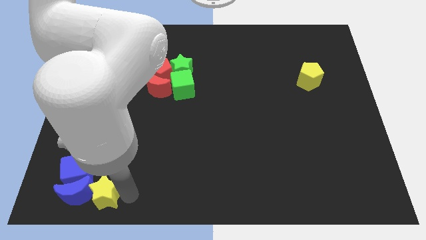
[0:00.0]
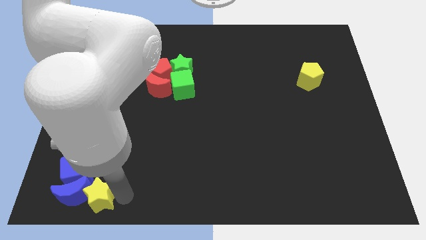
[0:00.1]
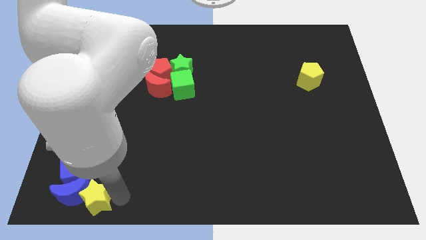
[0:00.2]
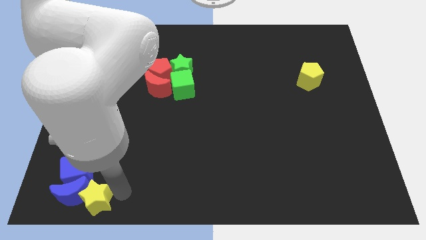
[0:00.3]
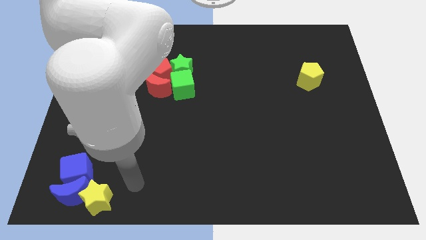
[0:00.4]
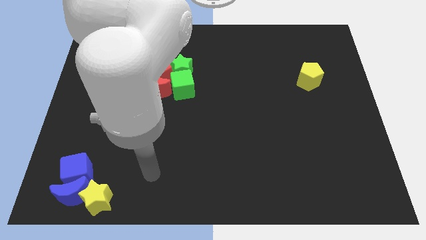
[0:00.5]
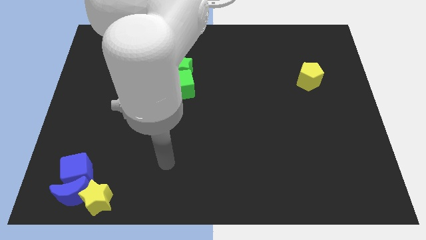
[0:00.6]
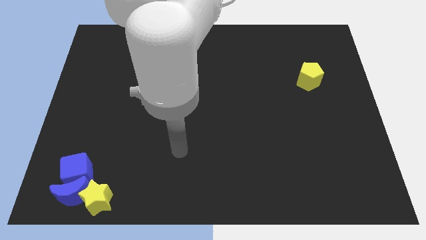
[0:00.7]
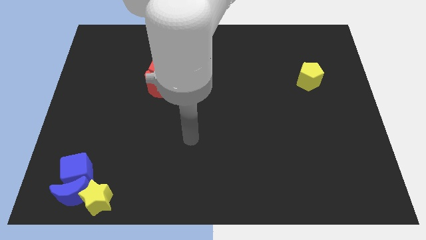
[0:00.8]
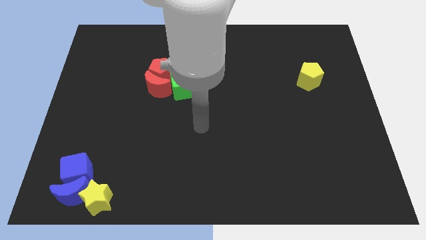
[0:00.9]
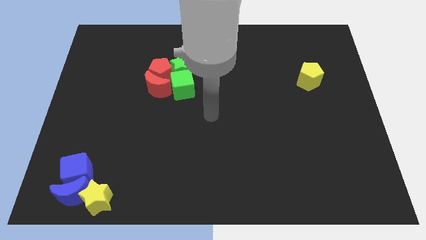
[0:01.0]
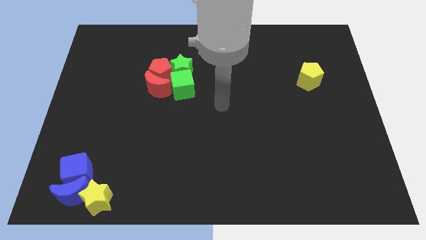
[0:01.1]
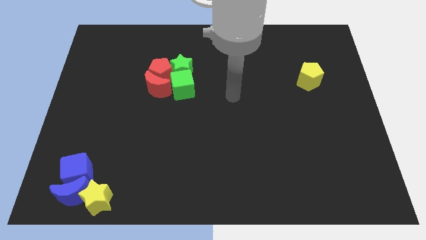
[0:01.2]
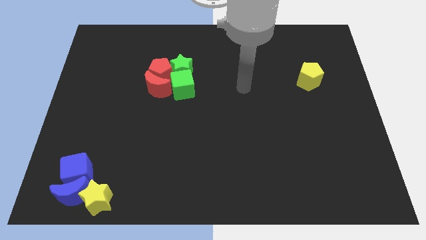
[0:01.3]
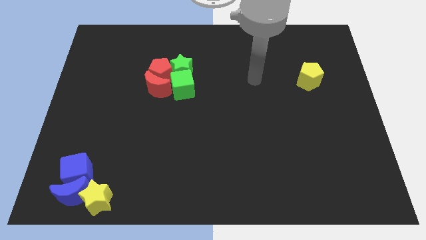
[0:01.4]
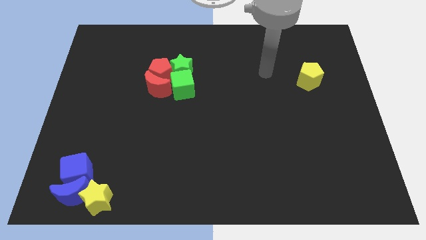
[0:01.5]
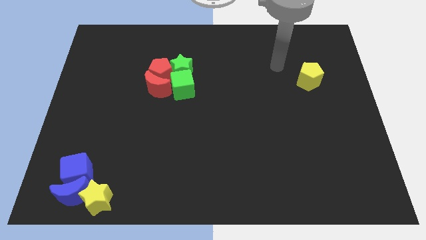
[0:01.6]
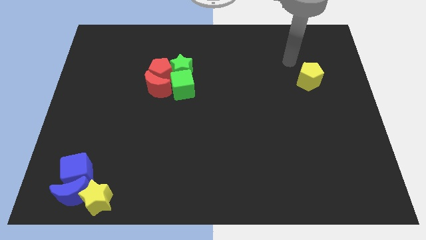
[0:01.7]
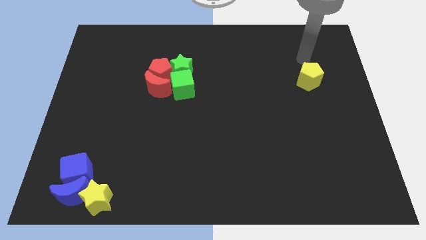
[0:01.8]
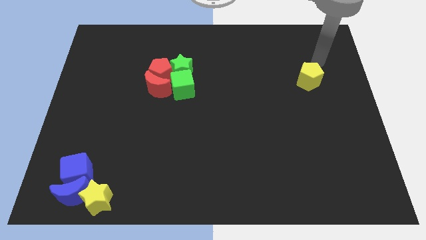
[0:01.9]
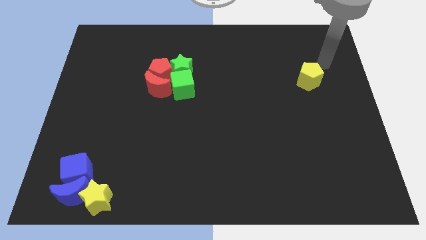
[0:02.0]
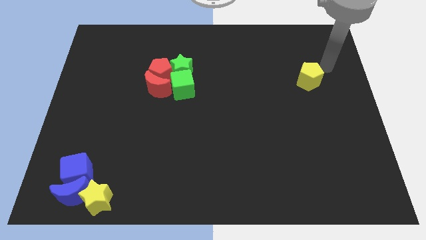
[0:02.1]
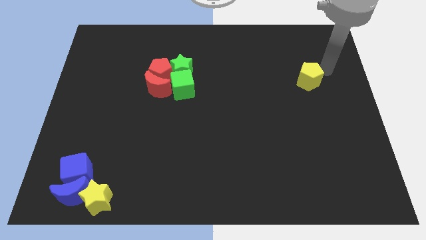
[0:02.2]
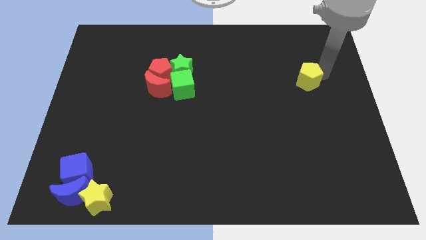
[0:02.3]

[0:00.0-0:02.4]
move your arm away from the yellow star

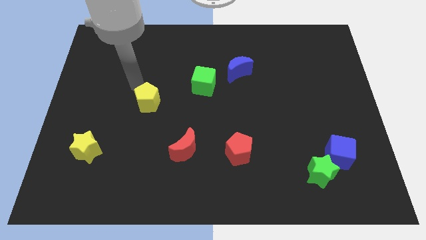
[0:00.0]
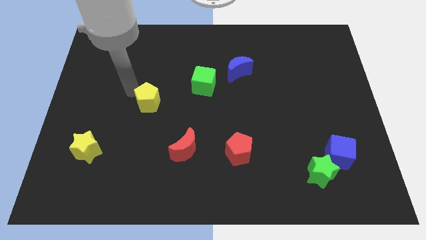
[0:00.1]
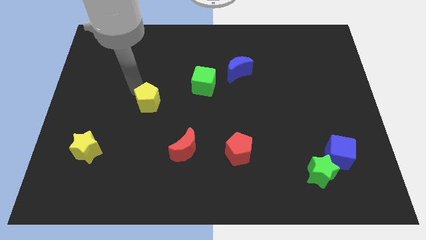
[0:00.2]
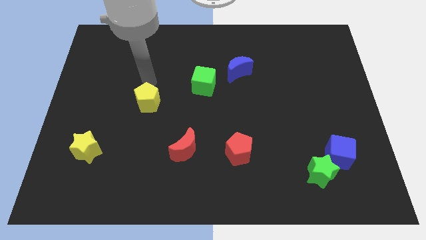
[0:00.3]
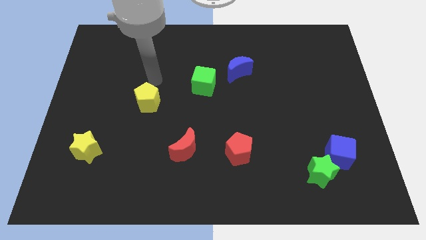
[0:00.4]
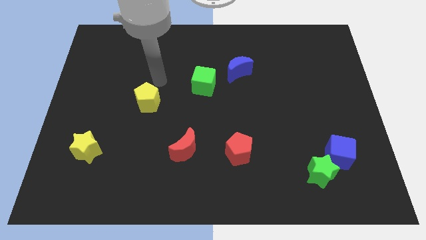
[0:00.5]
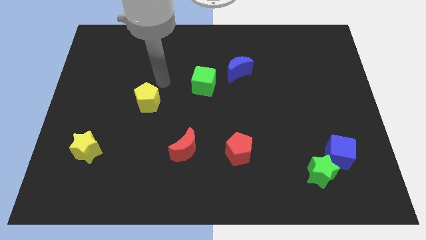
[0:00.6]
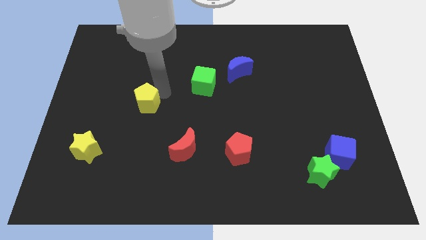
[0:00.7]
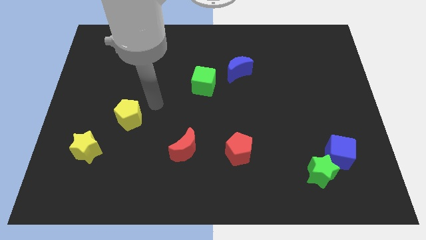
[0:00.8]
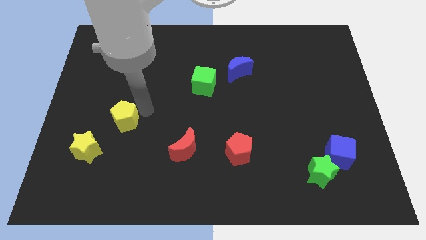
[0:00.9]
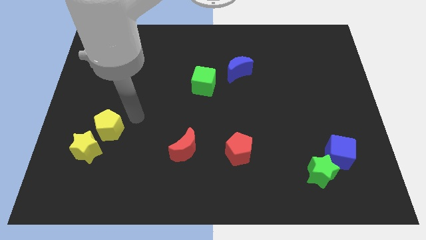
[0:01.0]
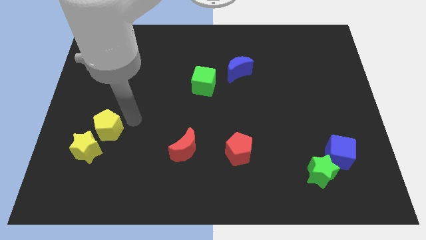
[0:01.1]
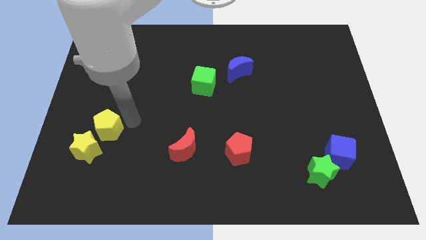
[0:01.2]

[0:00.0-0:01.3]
move the yellow pentagon close to the yellow star

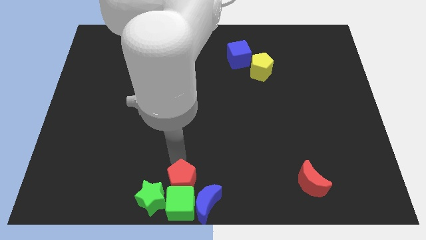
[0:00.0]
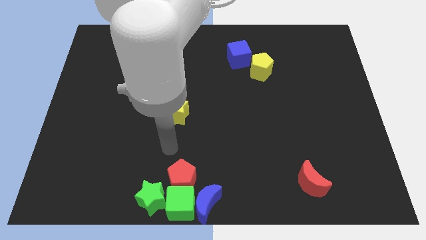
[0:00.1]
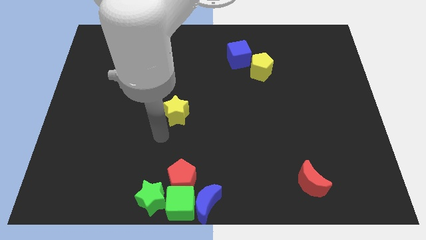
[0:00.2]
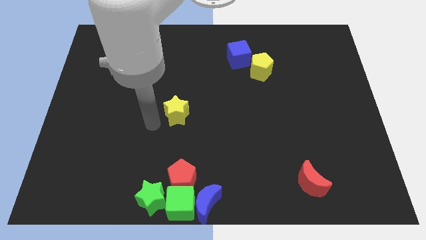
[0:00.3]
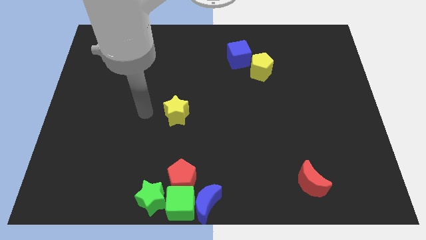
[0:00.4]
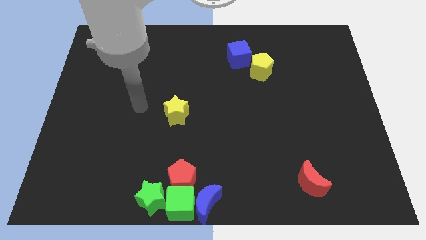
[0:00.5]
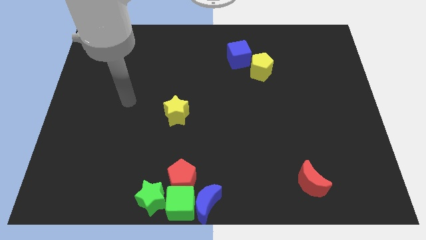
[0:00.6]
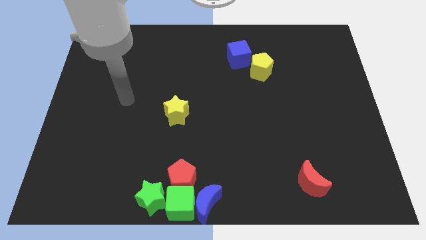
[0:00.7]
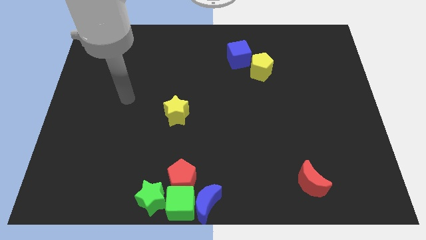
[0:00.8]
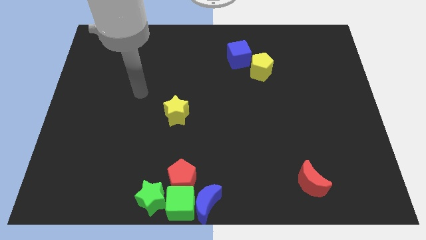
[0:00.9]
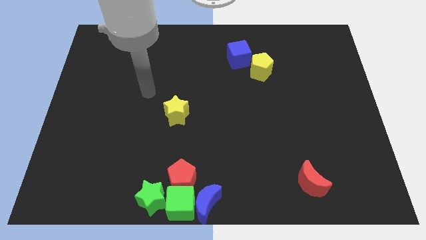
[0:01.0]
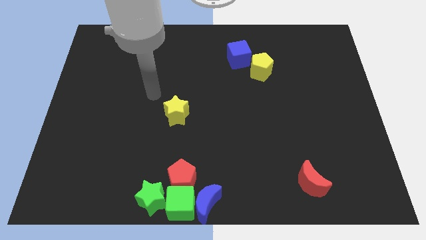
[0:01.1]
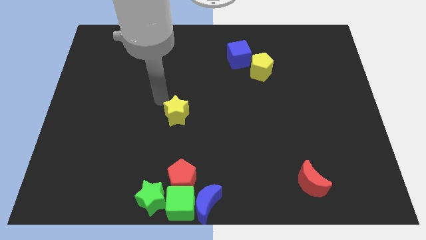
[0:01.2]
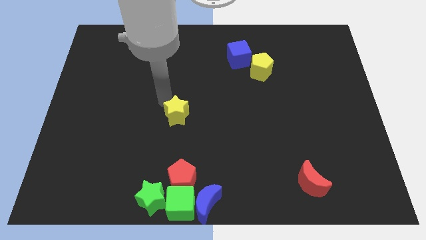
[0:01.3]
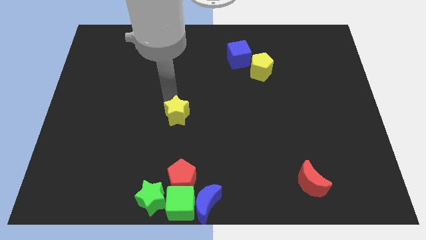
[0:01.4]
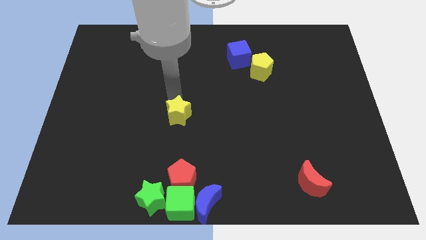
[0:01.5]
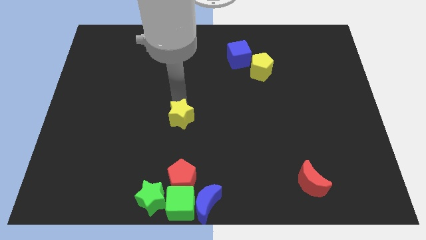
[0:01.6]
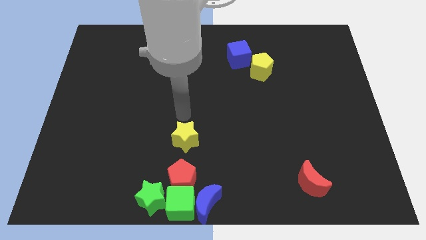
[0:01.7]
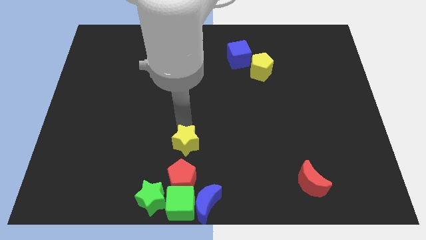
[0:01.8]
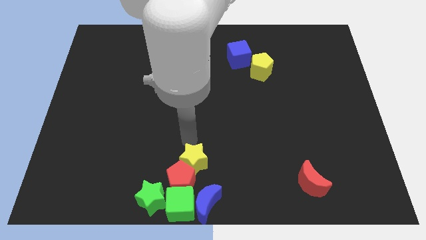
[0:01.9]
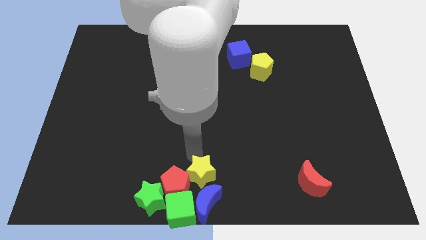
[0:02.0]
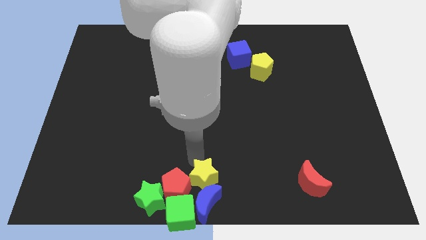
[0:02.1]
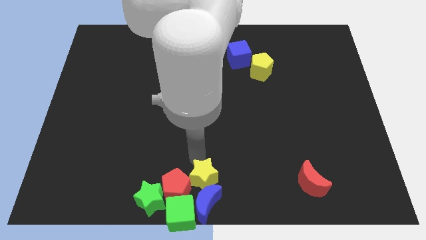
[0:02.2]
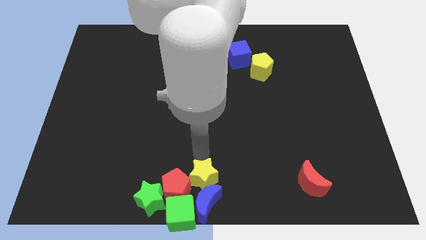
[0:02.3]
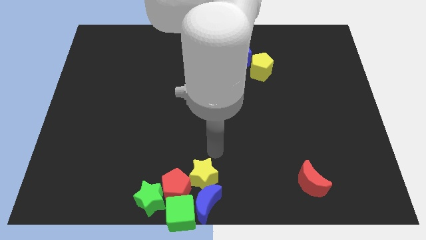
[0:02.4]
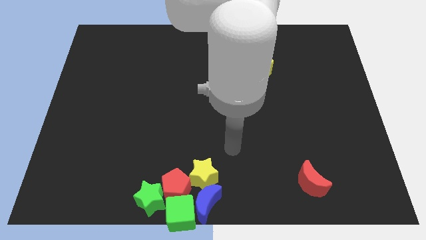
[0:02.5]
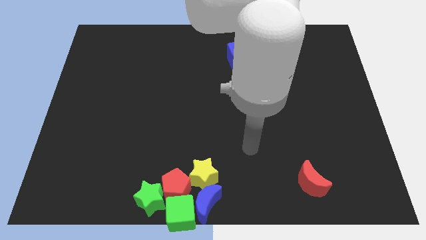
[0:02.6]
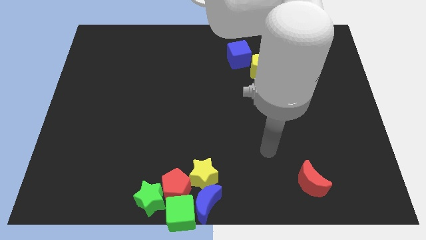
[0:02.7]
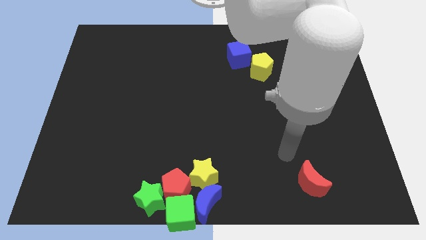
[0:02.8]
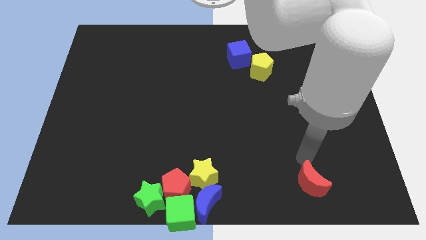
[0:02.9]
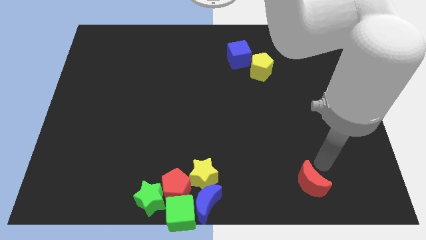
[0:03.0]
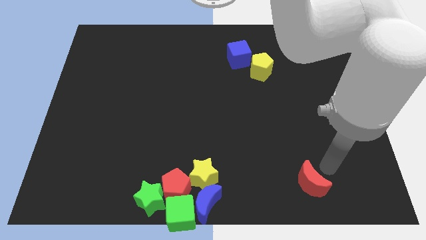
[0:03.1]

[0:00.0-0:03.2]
move the arm away from the red pentagon

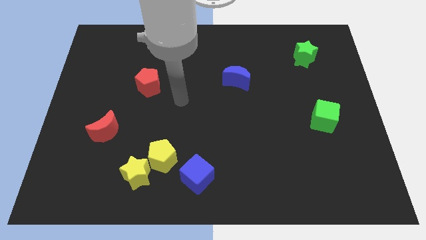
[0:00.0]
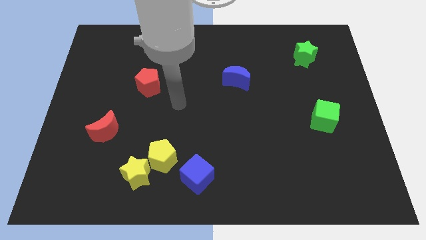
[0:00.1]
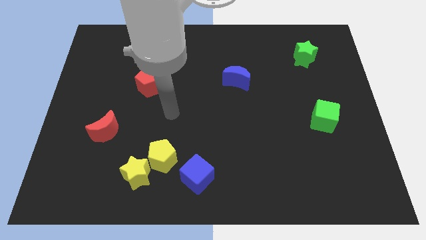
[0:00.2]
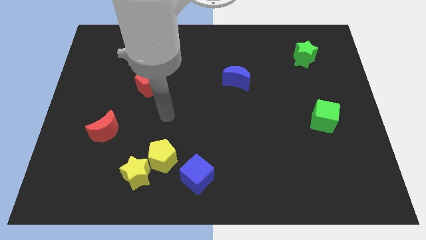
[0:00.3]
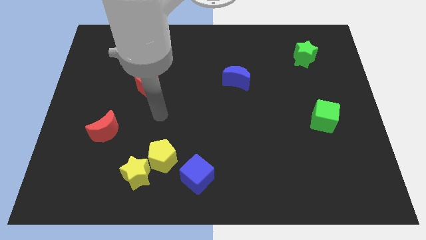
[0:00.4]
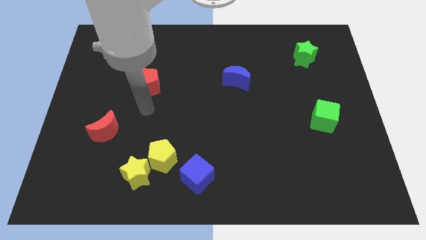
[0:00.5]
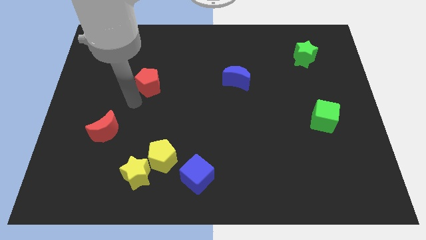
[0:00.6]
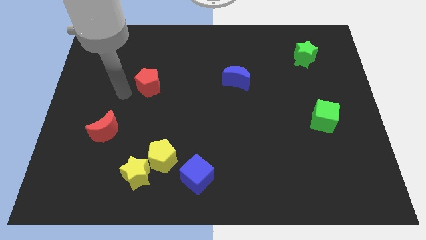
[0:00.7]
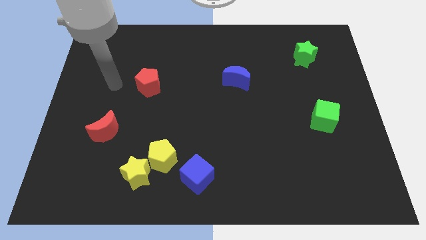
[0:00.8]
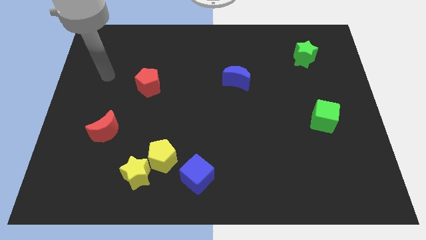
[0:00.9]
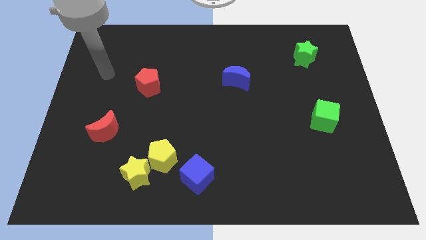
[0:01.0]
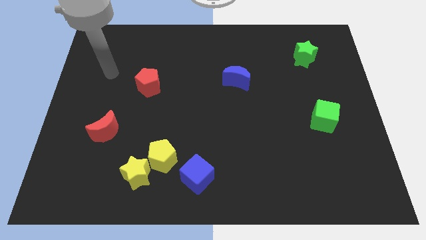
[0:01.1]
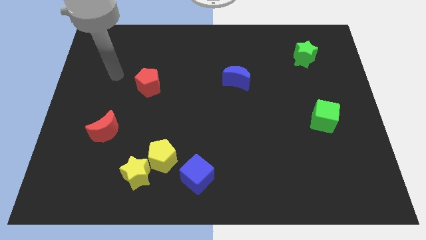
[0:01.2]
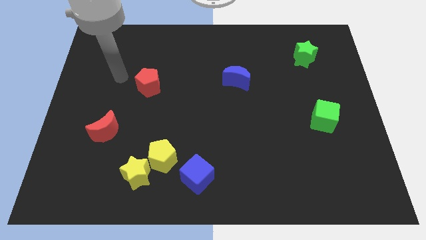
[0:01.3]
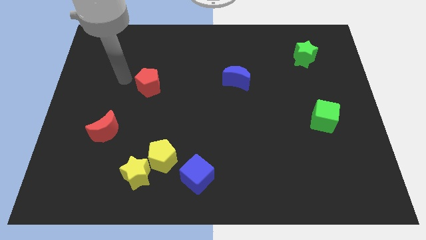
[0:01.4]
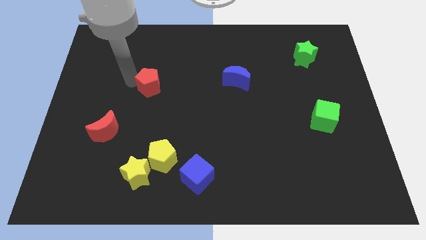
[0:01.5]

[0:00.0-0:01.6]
point your arm at the left of the red pentagon

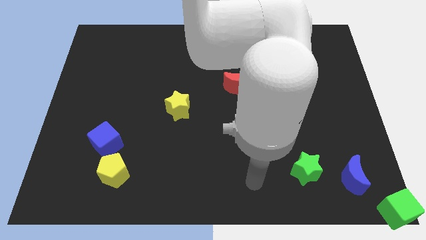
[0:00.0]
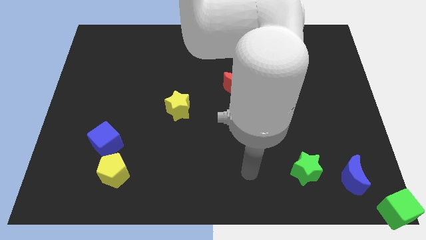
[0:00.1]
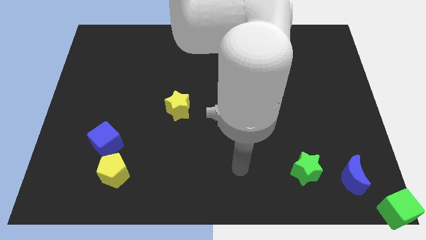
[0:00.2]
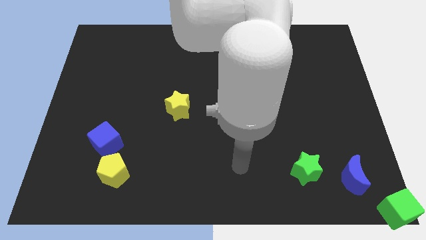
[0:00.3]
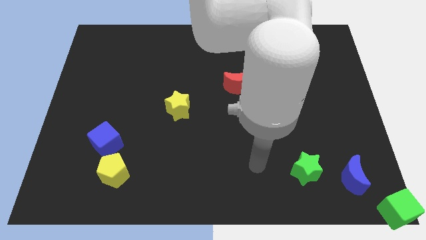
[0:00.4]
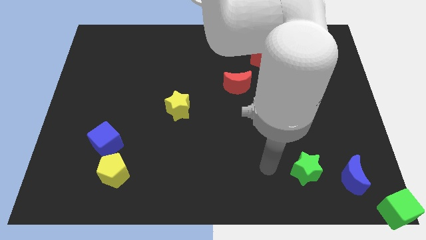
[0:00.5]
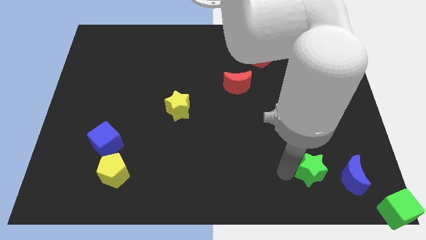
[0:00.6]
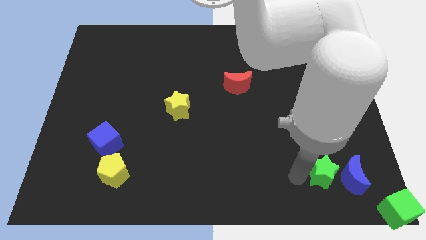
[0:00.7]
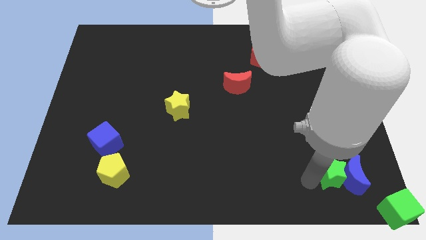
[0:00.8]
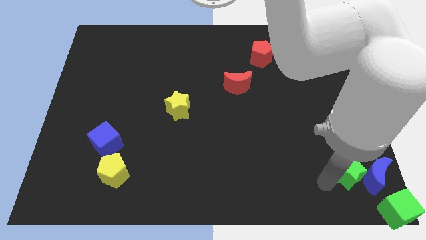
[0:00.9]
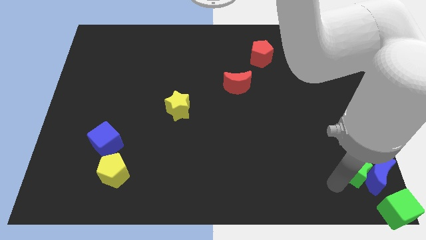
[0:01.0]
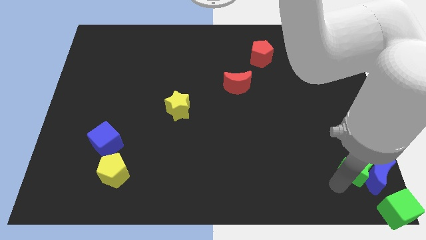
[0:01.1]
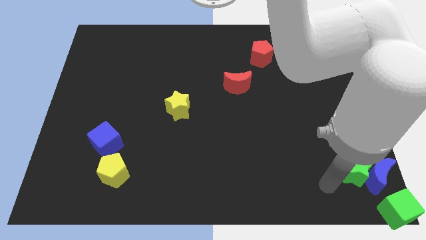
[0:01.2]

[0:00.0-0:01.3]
push the green star into the blue crescent
